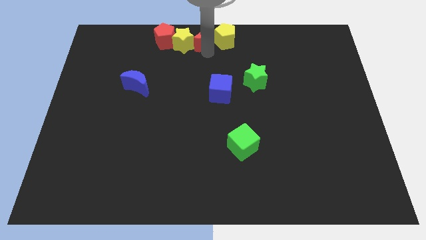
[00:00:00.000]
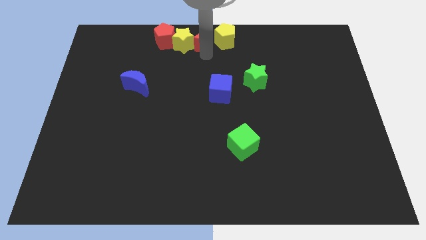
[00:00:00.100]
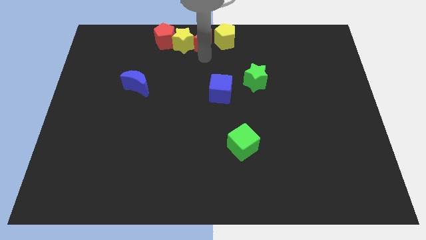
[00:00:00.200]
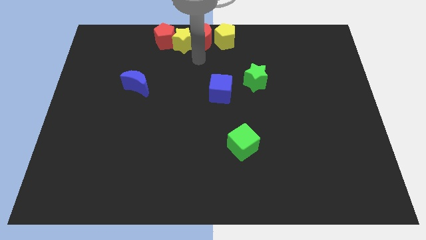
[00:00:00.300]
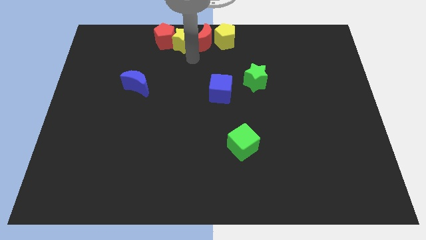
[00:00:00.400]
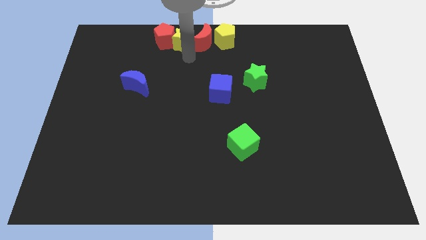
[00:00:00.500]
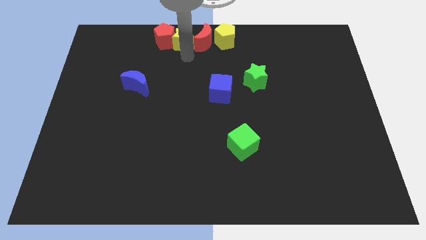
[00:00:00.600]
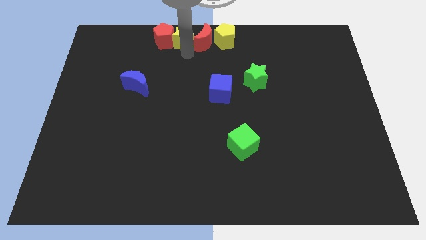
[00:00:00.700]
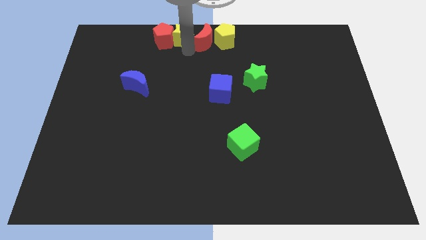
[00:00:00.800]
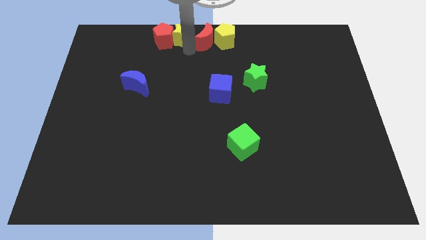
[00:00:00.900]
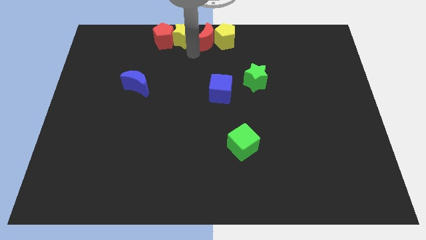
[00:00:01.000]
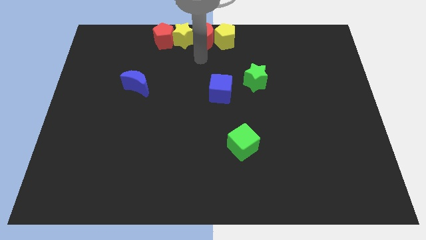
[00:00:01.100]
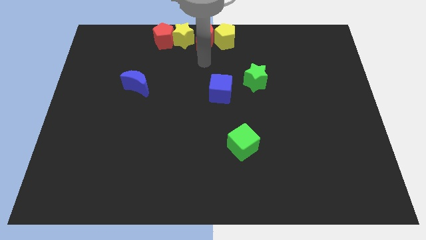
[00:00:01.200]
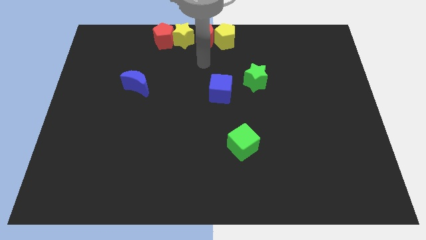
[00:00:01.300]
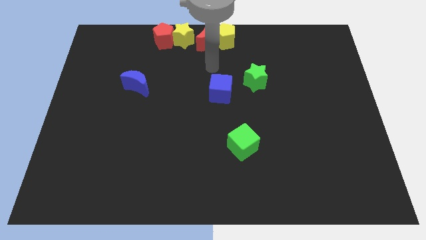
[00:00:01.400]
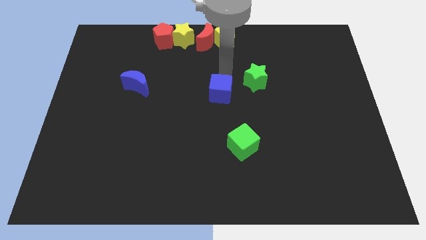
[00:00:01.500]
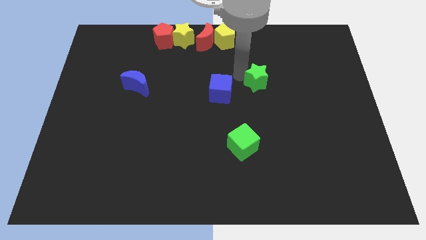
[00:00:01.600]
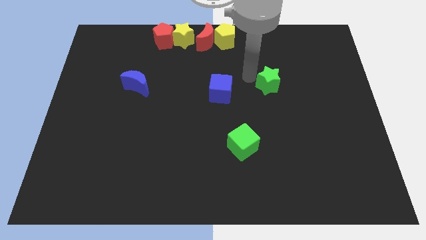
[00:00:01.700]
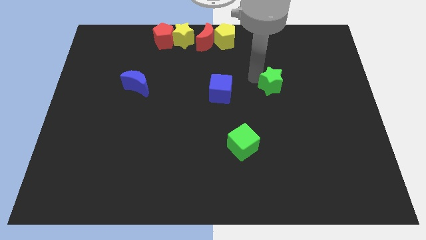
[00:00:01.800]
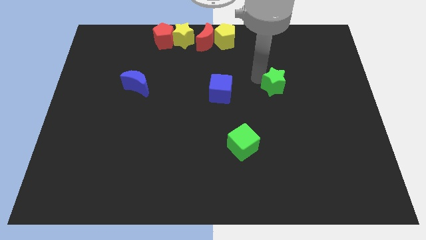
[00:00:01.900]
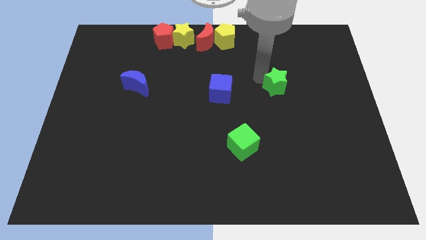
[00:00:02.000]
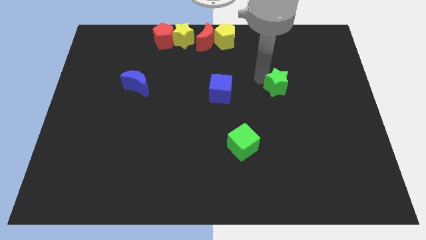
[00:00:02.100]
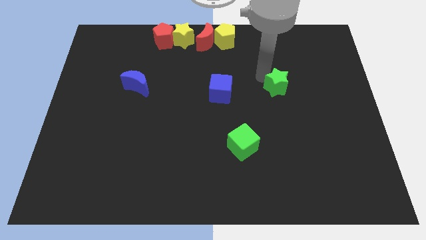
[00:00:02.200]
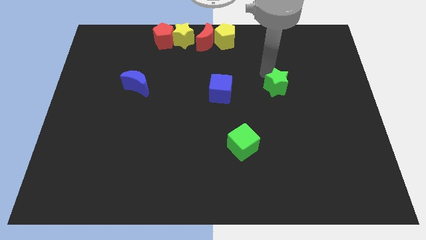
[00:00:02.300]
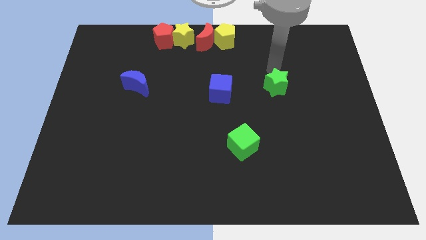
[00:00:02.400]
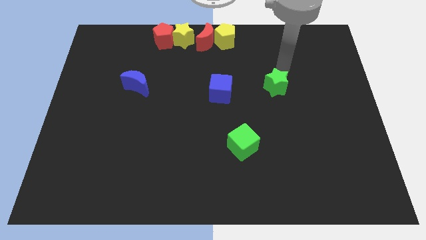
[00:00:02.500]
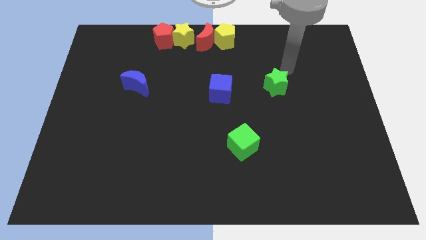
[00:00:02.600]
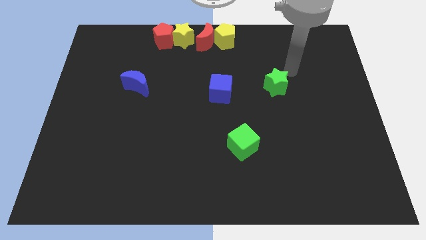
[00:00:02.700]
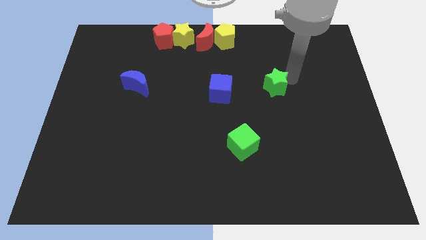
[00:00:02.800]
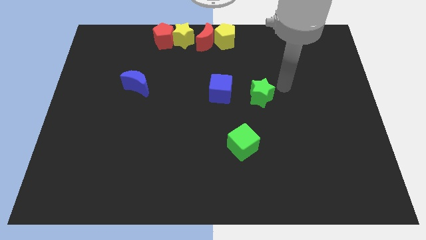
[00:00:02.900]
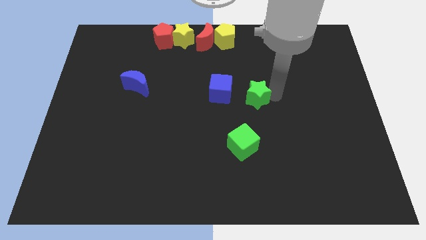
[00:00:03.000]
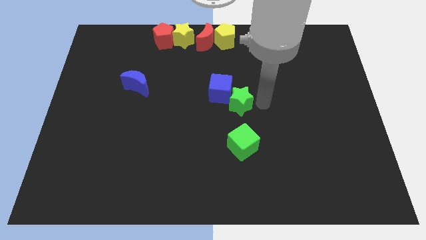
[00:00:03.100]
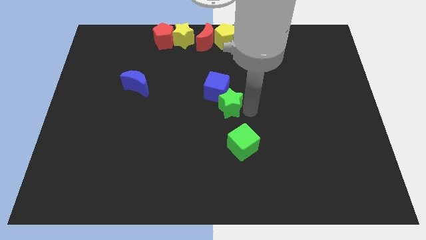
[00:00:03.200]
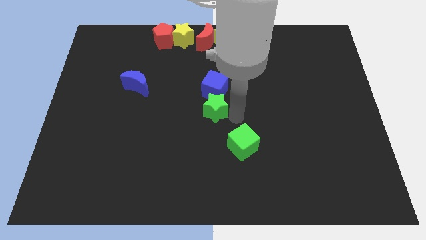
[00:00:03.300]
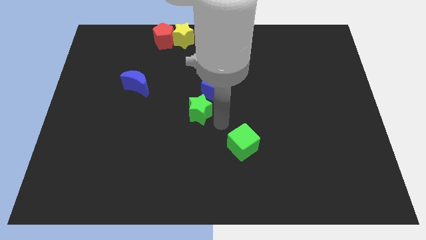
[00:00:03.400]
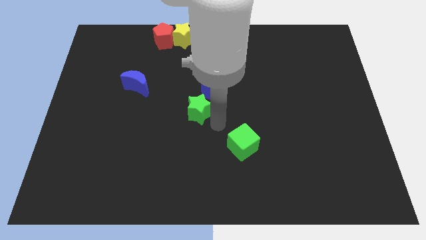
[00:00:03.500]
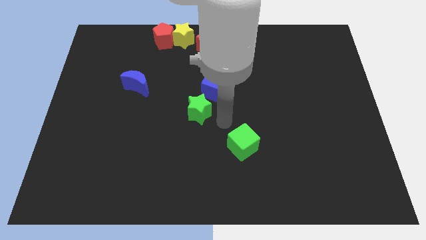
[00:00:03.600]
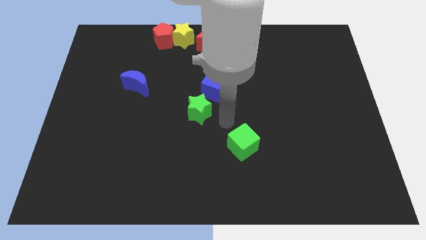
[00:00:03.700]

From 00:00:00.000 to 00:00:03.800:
move the green star to the center of the board

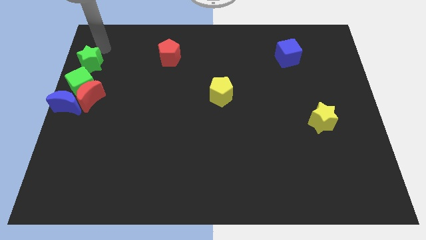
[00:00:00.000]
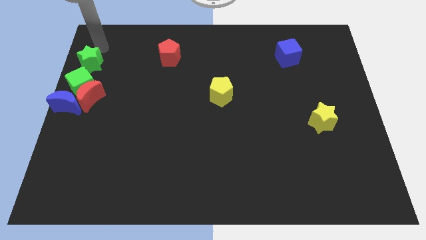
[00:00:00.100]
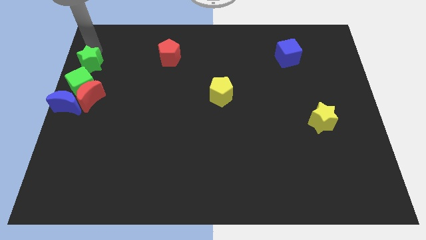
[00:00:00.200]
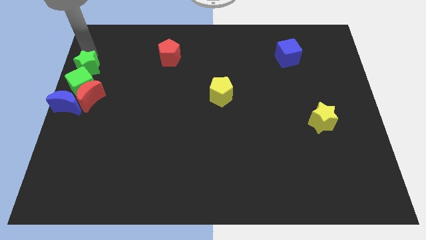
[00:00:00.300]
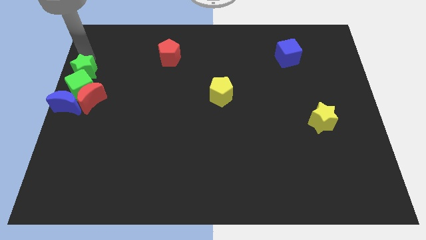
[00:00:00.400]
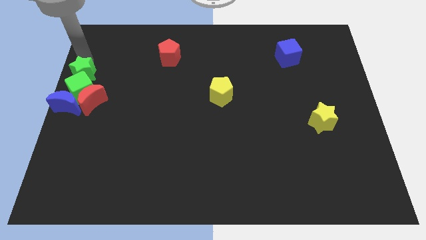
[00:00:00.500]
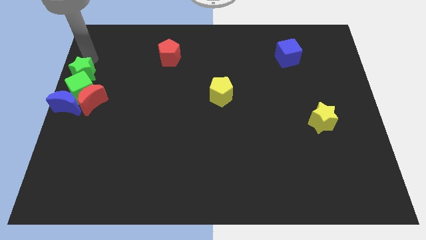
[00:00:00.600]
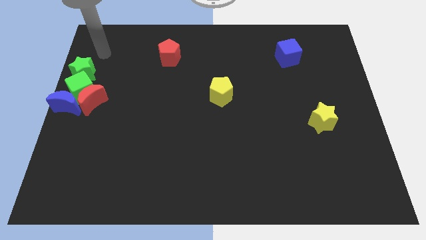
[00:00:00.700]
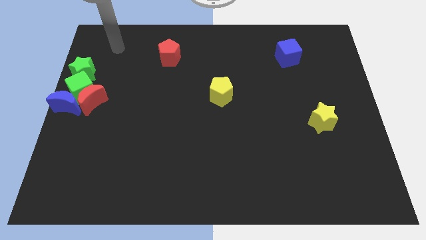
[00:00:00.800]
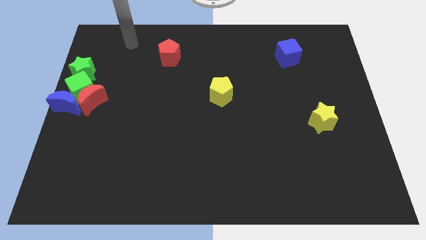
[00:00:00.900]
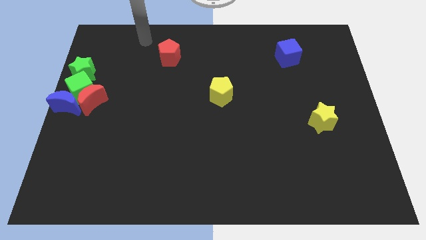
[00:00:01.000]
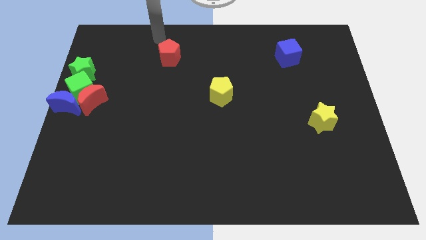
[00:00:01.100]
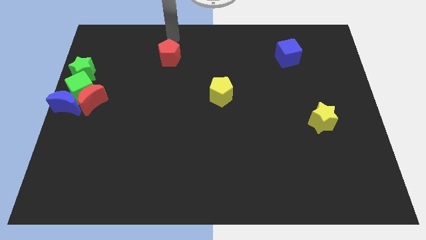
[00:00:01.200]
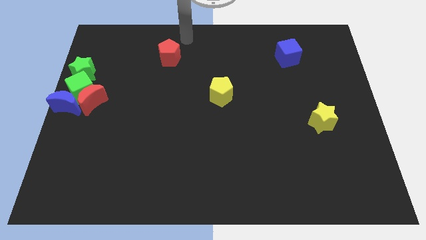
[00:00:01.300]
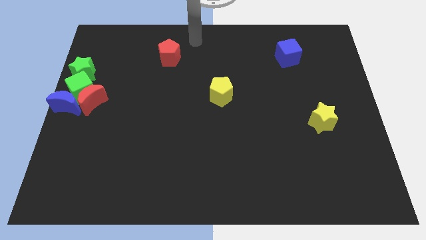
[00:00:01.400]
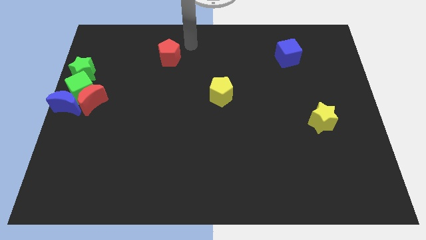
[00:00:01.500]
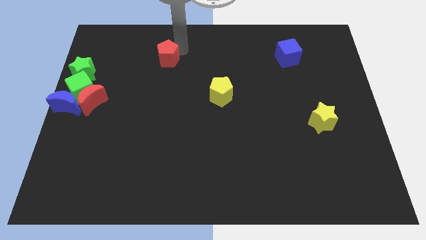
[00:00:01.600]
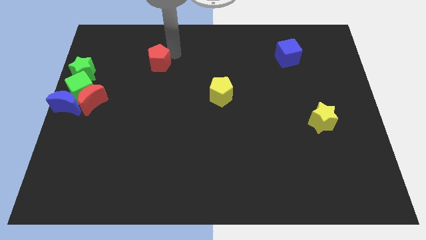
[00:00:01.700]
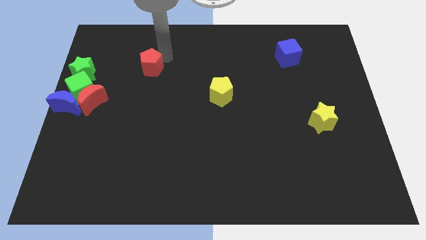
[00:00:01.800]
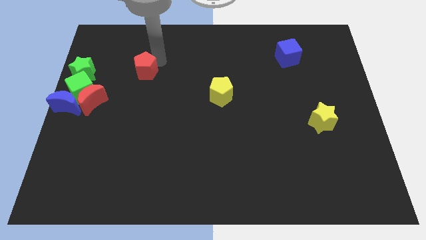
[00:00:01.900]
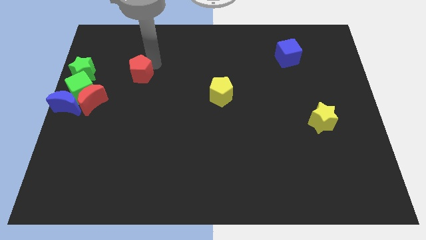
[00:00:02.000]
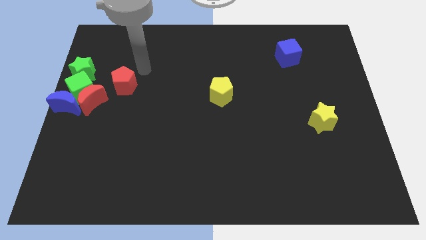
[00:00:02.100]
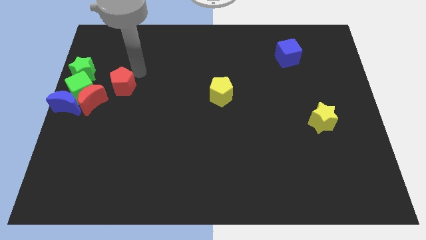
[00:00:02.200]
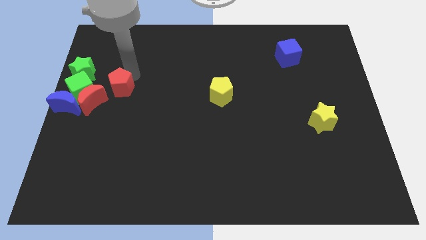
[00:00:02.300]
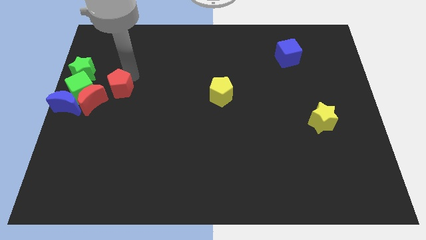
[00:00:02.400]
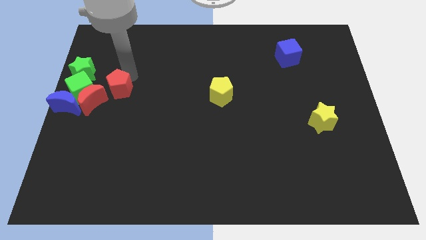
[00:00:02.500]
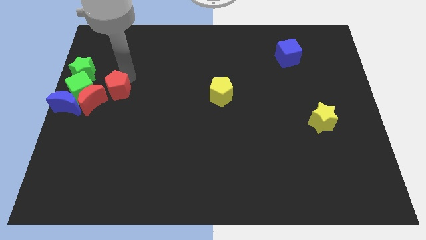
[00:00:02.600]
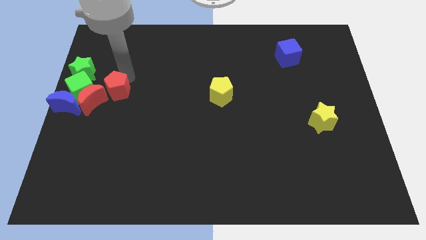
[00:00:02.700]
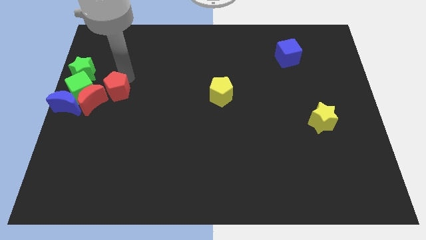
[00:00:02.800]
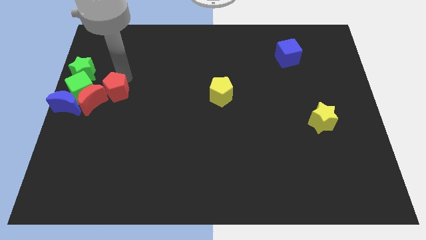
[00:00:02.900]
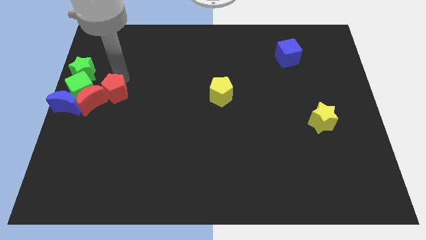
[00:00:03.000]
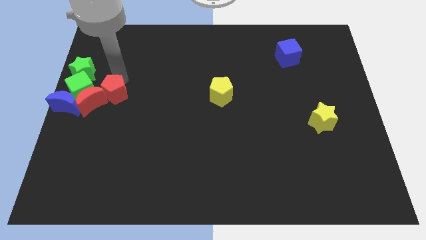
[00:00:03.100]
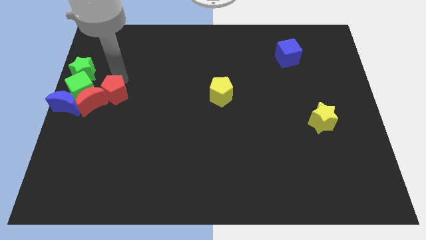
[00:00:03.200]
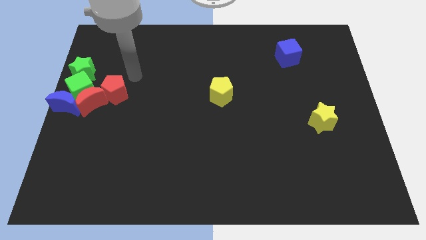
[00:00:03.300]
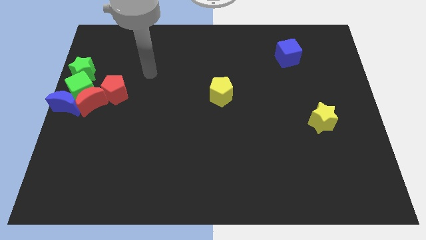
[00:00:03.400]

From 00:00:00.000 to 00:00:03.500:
push the red pentagon into the red moon

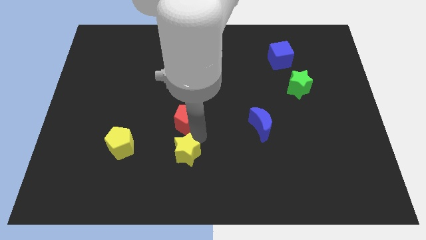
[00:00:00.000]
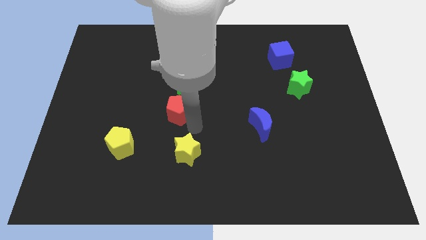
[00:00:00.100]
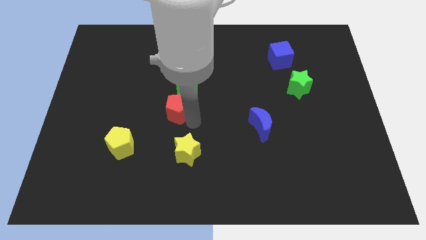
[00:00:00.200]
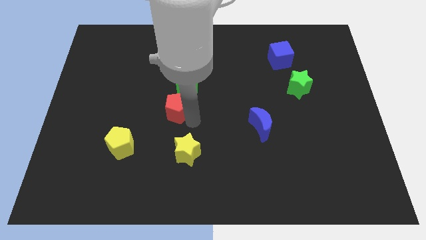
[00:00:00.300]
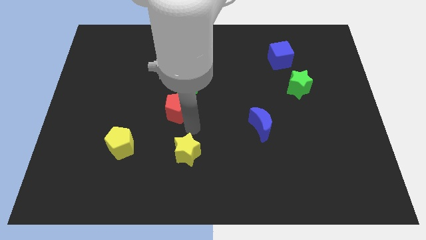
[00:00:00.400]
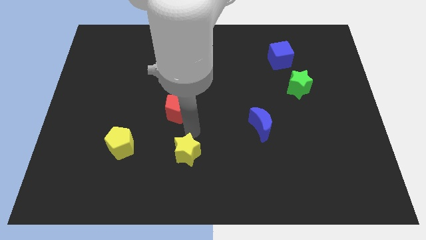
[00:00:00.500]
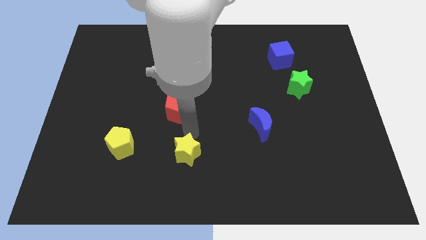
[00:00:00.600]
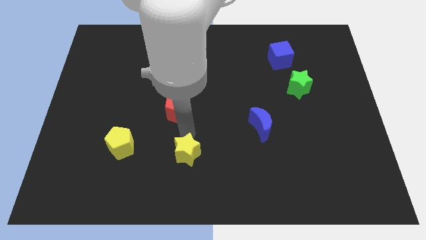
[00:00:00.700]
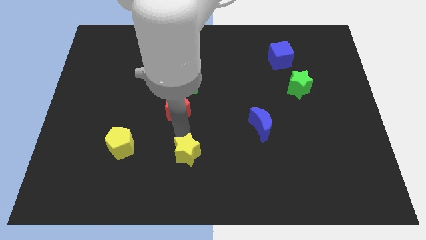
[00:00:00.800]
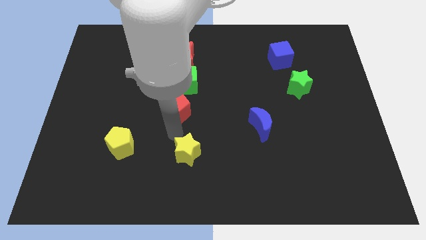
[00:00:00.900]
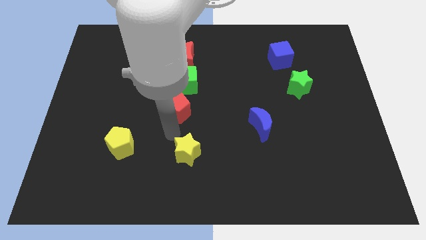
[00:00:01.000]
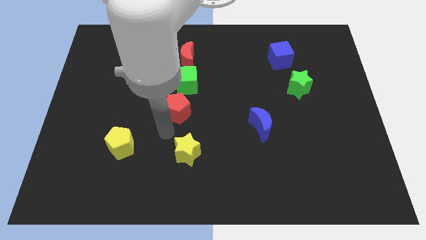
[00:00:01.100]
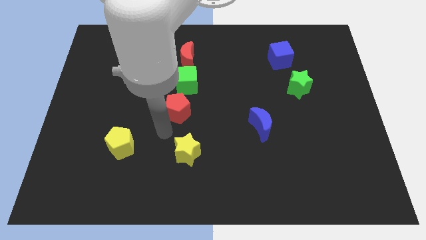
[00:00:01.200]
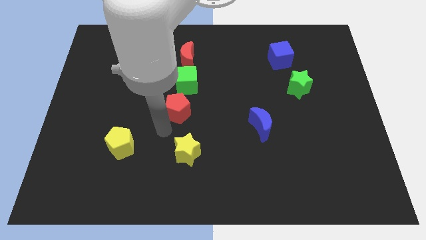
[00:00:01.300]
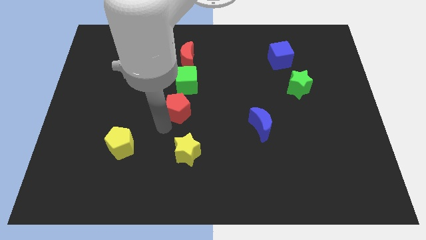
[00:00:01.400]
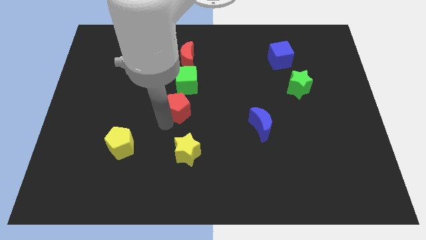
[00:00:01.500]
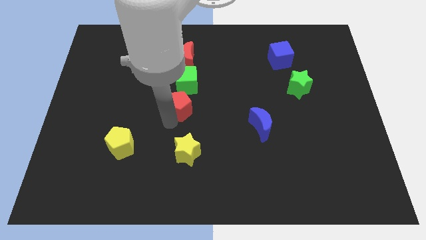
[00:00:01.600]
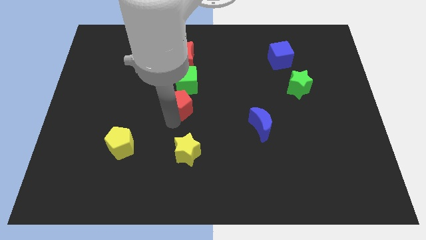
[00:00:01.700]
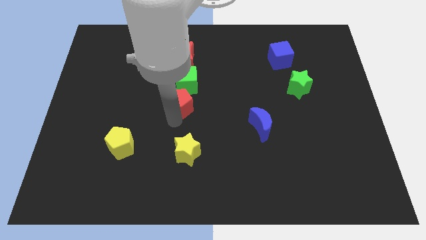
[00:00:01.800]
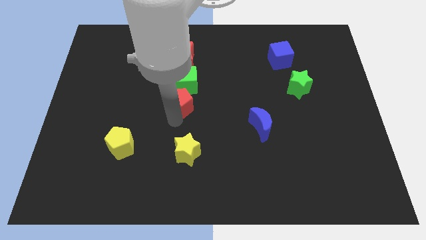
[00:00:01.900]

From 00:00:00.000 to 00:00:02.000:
move the red pentagon under the green cube
